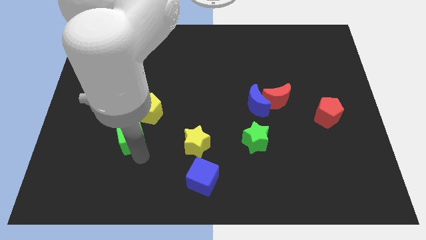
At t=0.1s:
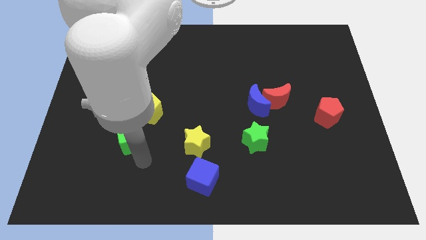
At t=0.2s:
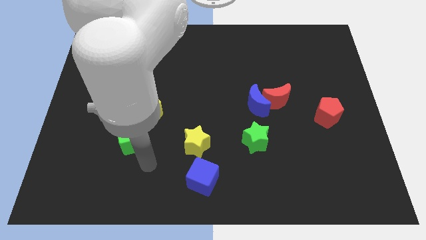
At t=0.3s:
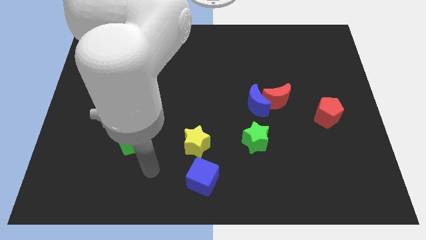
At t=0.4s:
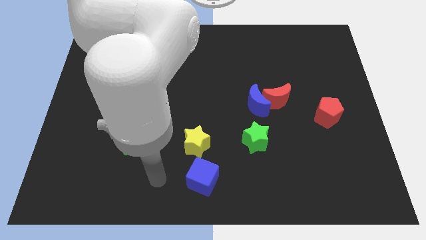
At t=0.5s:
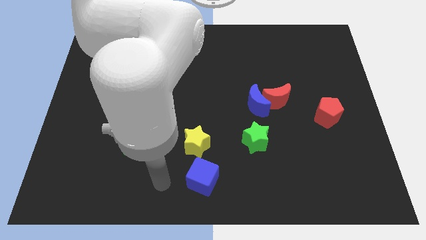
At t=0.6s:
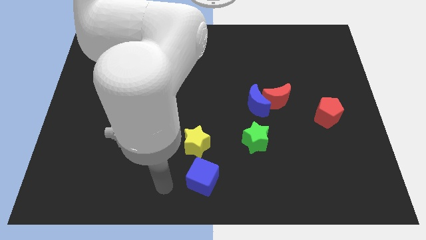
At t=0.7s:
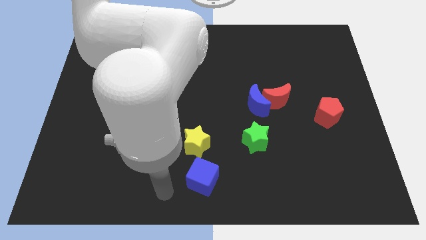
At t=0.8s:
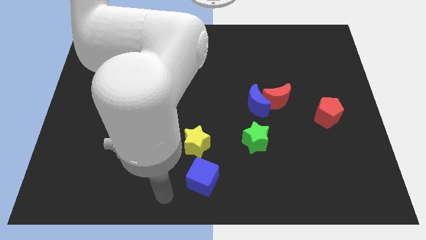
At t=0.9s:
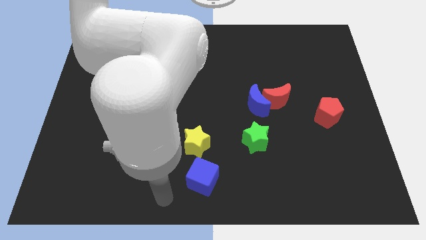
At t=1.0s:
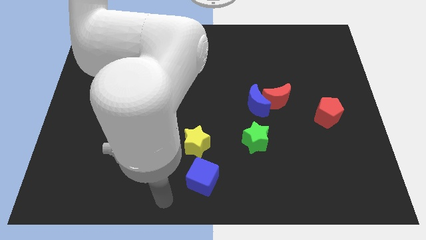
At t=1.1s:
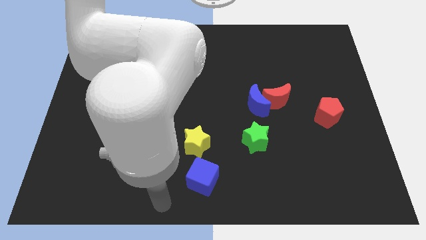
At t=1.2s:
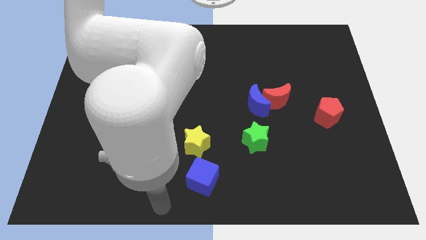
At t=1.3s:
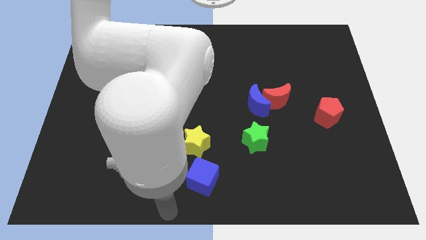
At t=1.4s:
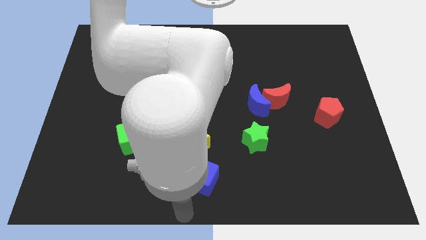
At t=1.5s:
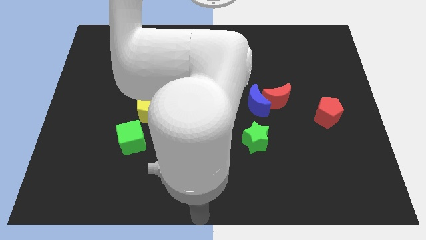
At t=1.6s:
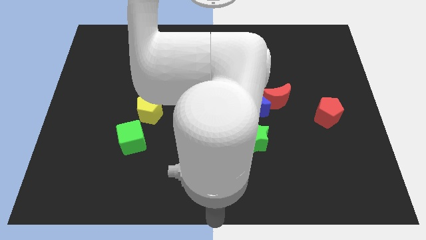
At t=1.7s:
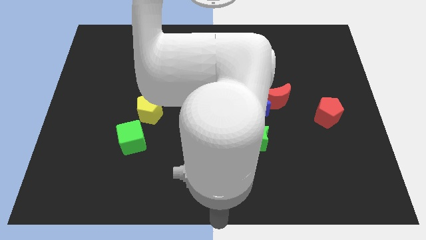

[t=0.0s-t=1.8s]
point your arm at the bottom center of the board

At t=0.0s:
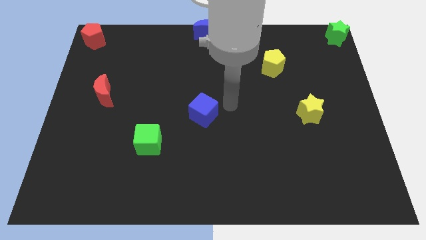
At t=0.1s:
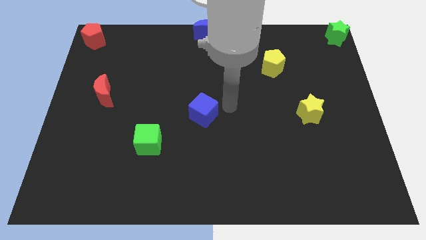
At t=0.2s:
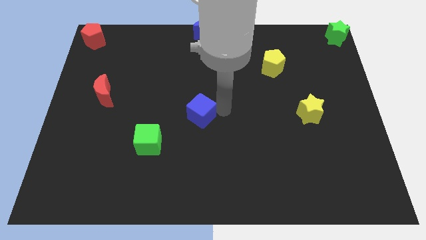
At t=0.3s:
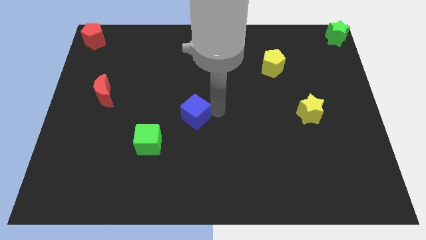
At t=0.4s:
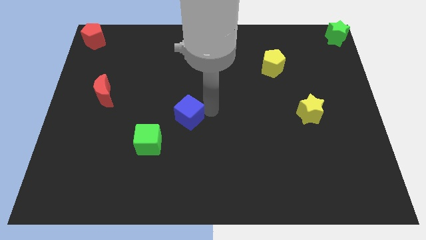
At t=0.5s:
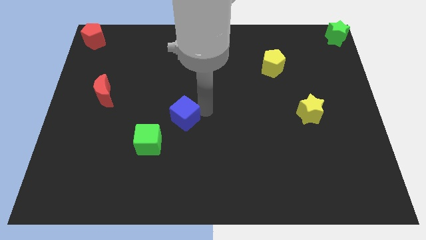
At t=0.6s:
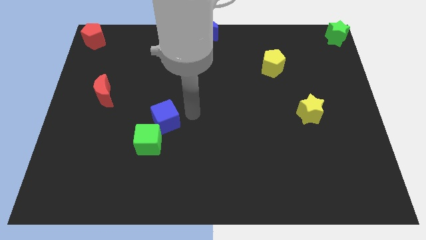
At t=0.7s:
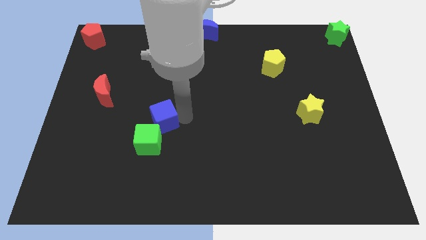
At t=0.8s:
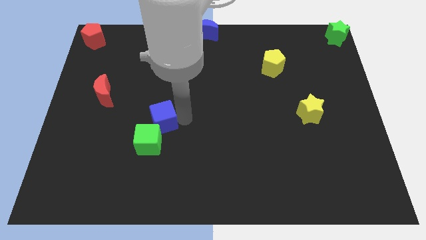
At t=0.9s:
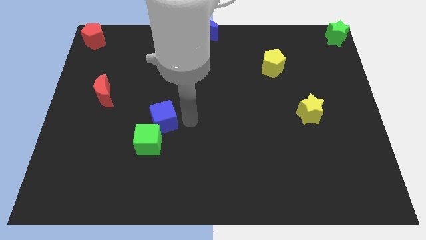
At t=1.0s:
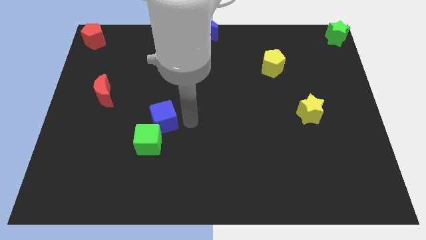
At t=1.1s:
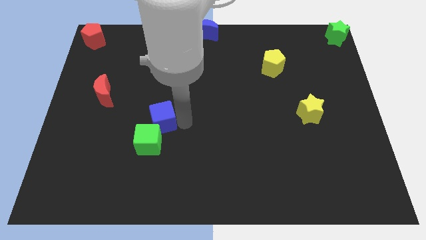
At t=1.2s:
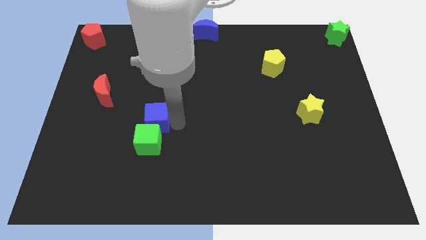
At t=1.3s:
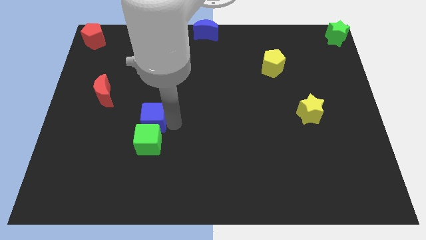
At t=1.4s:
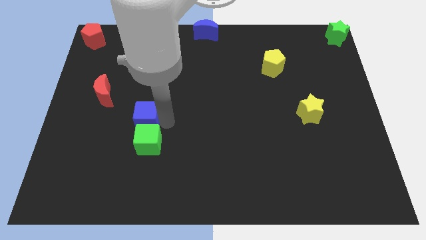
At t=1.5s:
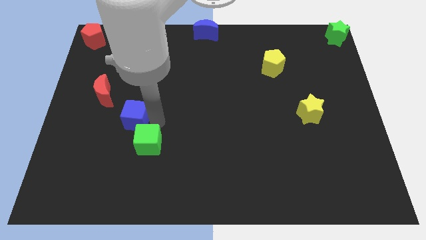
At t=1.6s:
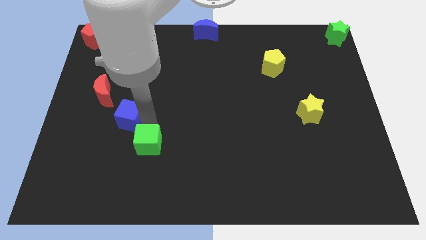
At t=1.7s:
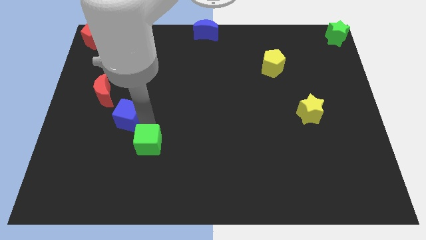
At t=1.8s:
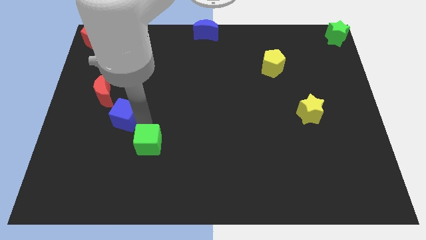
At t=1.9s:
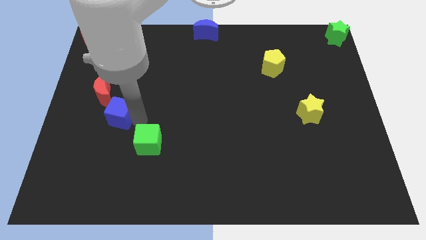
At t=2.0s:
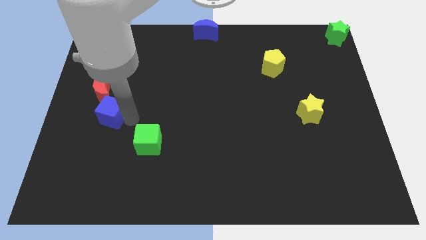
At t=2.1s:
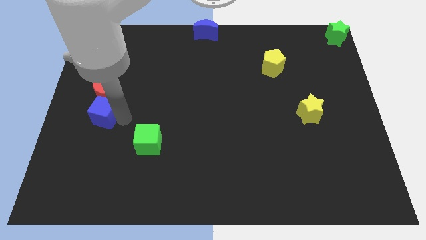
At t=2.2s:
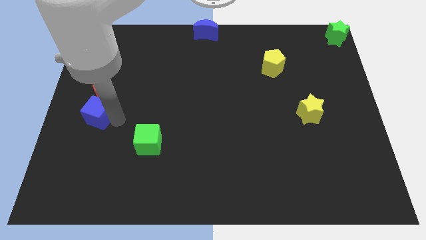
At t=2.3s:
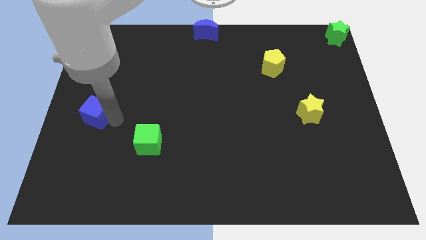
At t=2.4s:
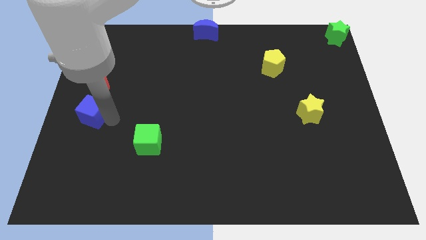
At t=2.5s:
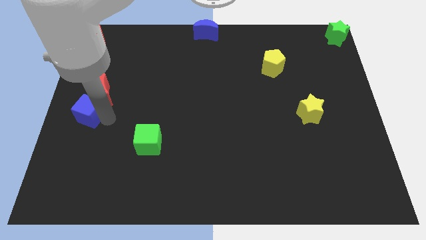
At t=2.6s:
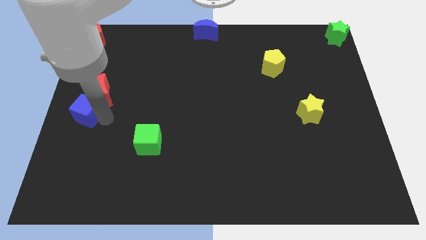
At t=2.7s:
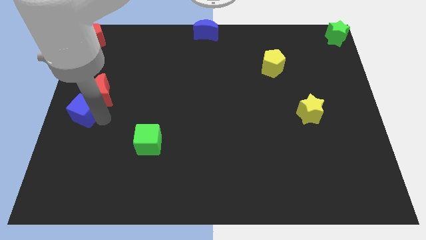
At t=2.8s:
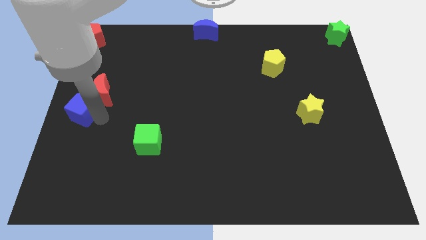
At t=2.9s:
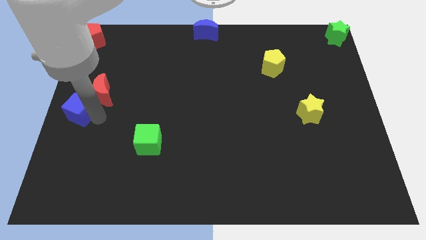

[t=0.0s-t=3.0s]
move the blue cube towards the middle left corner of the board

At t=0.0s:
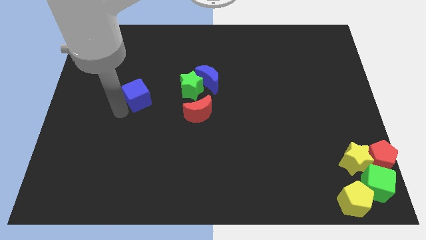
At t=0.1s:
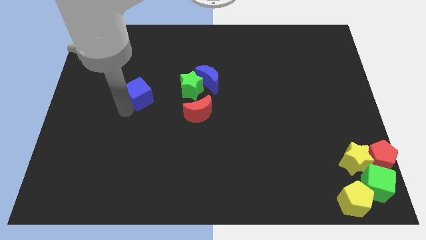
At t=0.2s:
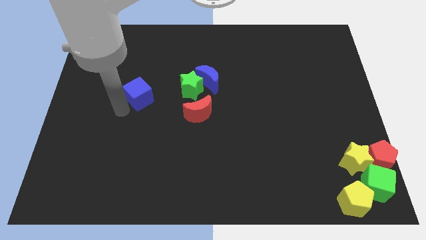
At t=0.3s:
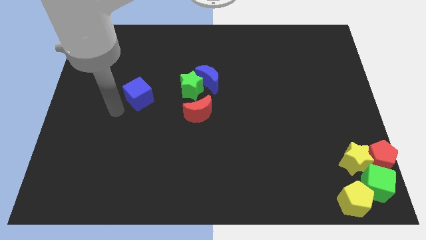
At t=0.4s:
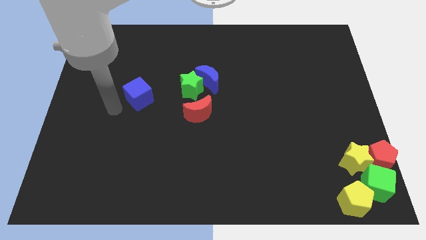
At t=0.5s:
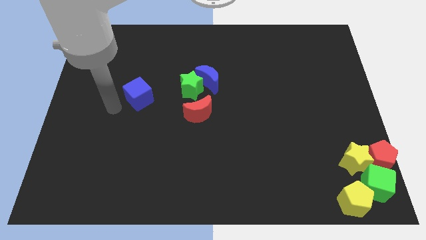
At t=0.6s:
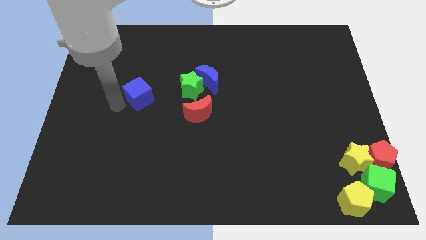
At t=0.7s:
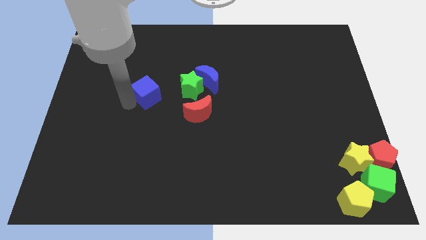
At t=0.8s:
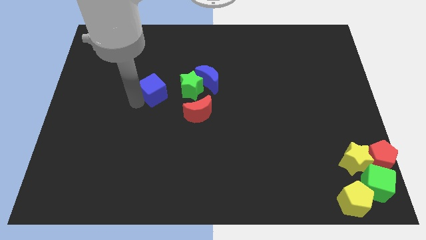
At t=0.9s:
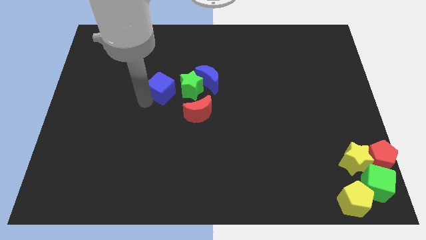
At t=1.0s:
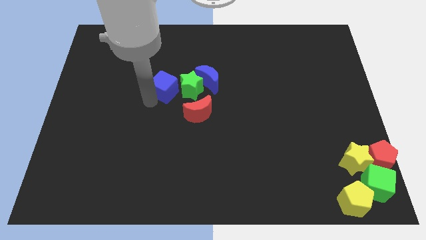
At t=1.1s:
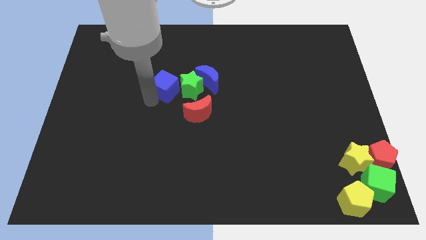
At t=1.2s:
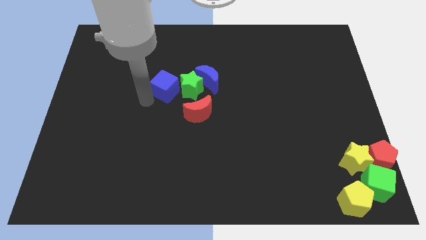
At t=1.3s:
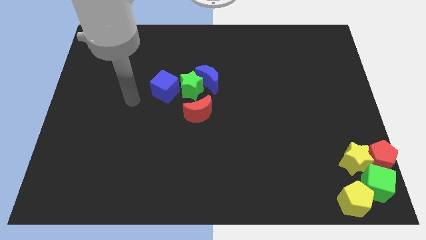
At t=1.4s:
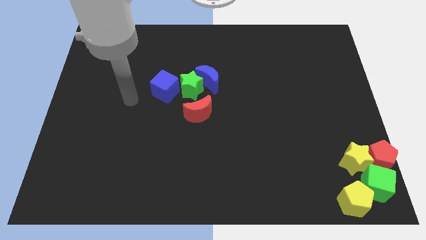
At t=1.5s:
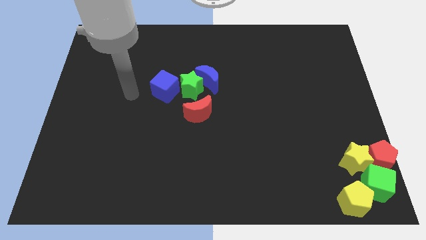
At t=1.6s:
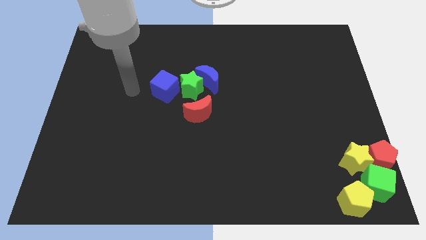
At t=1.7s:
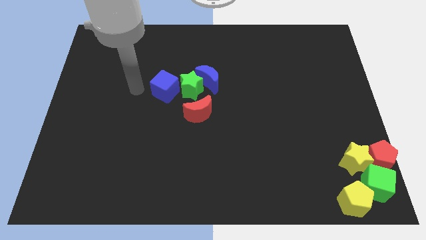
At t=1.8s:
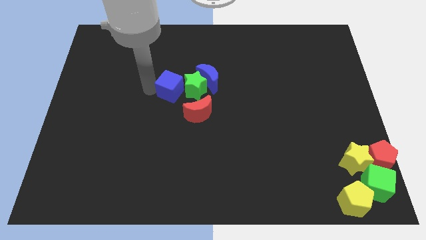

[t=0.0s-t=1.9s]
place the blue cube to the left side of the green star

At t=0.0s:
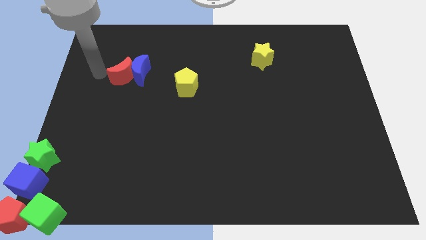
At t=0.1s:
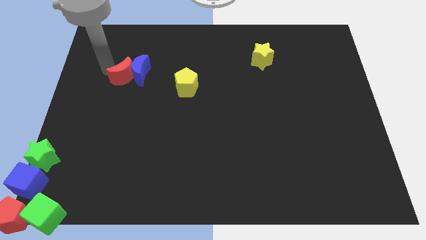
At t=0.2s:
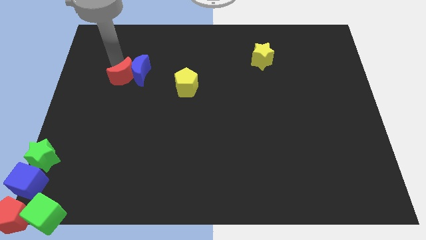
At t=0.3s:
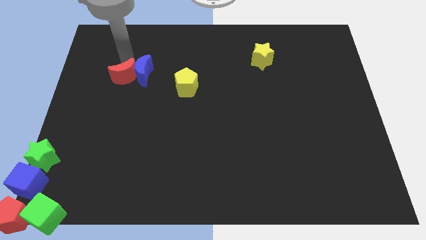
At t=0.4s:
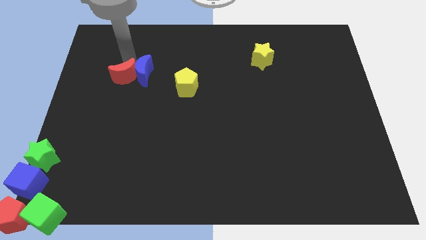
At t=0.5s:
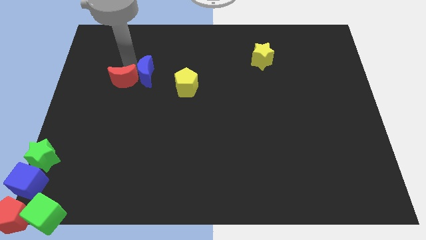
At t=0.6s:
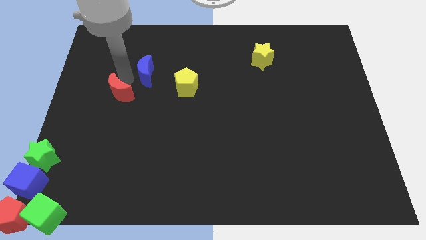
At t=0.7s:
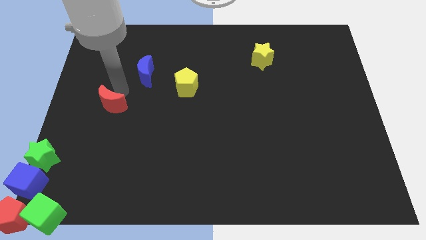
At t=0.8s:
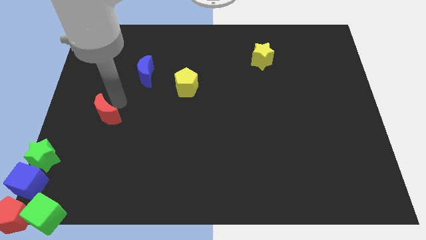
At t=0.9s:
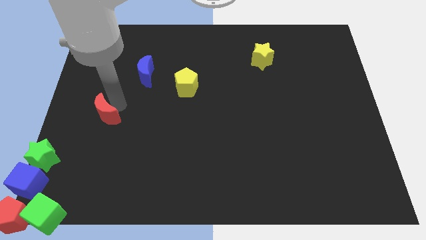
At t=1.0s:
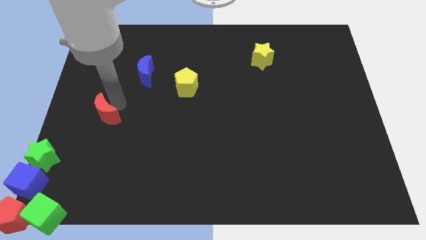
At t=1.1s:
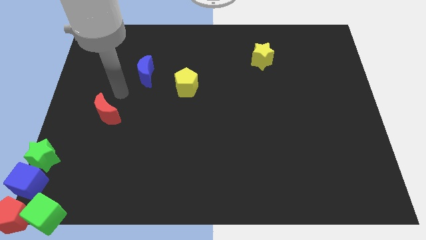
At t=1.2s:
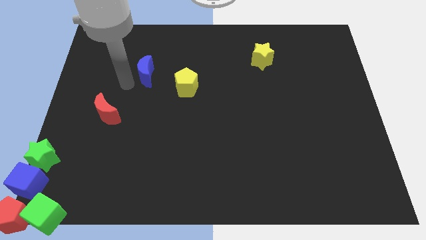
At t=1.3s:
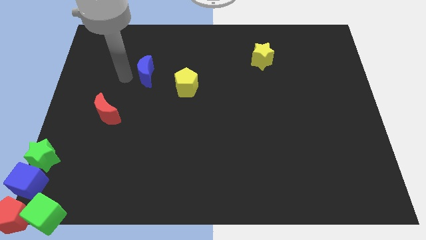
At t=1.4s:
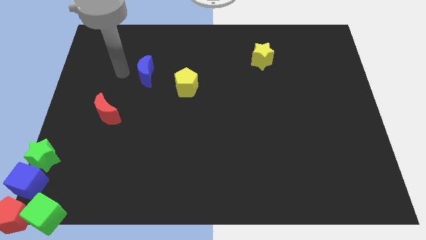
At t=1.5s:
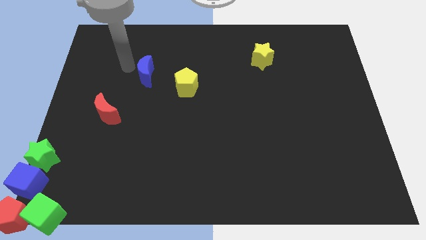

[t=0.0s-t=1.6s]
place the red moon diagonally top right to the green star

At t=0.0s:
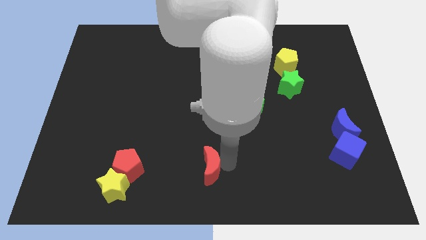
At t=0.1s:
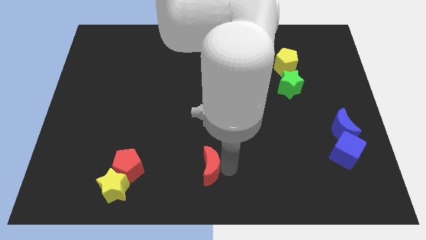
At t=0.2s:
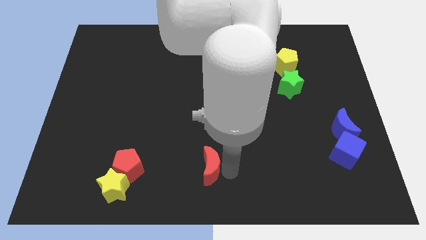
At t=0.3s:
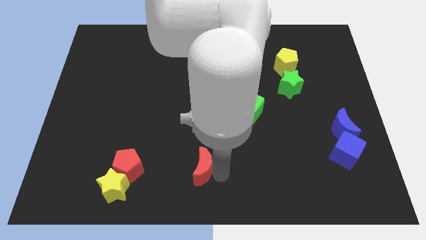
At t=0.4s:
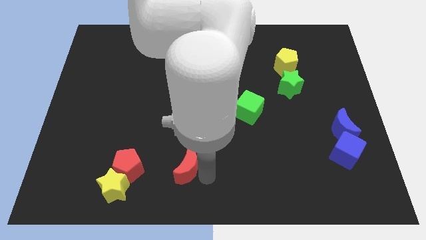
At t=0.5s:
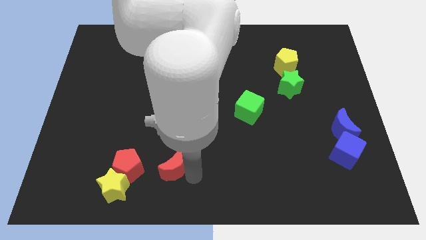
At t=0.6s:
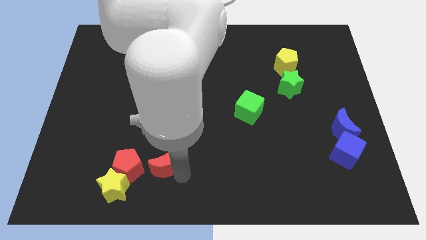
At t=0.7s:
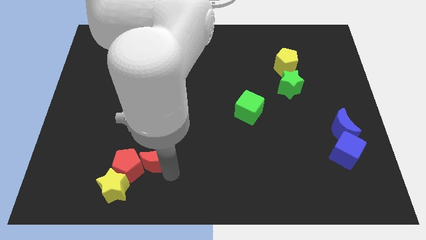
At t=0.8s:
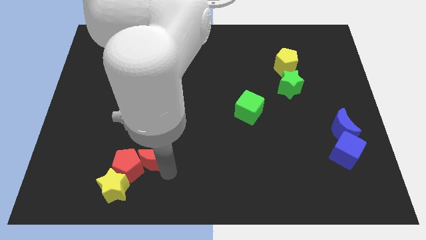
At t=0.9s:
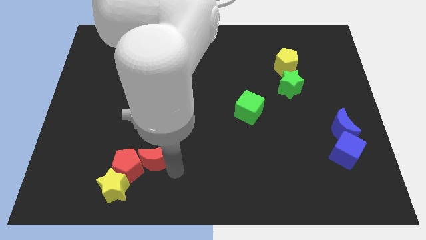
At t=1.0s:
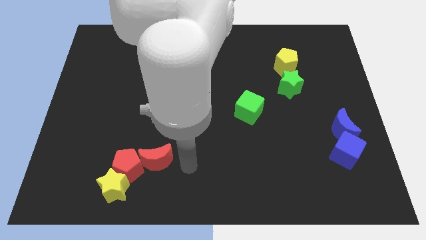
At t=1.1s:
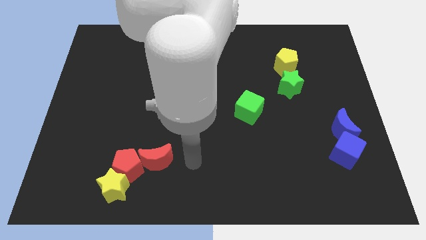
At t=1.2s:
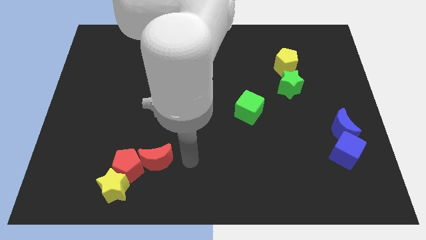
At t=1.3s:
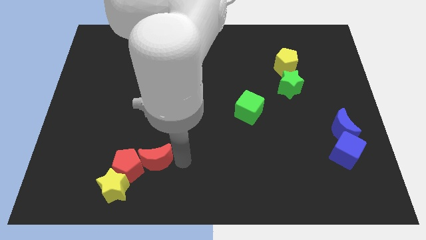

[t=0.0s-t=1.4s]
push the red crescent towards the red pentagon
